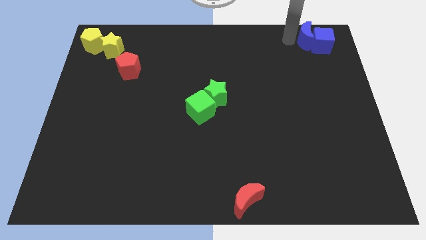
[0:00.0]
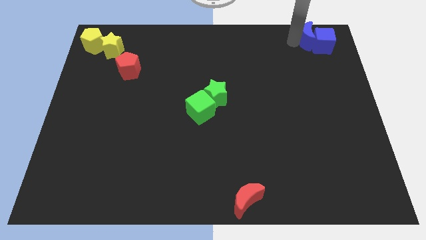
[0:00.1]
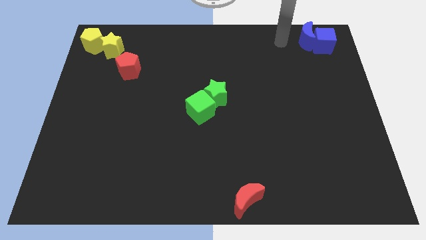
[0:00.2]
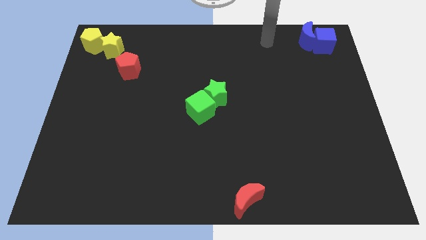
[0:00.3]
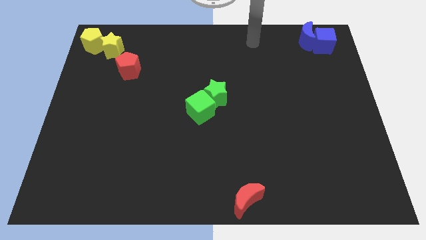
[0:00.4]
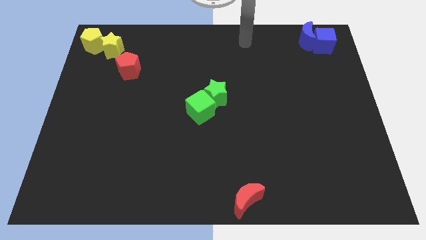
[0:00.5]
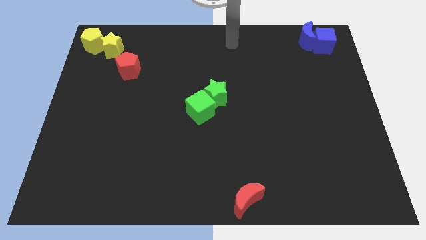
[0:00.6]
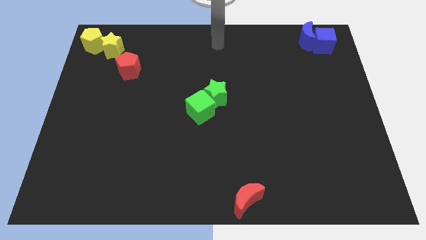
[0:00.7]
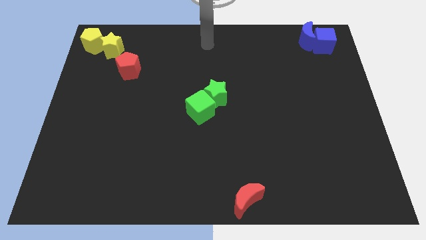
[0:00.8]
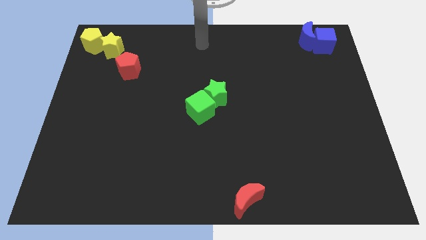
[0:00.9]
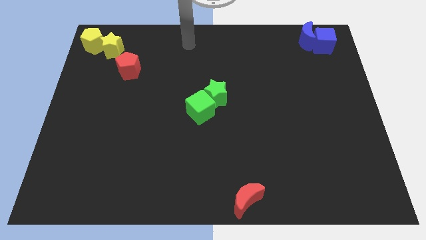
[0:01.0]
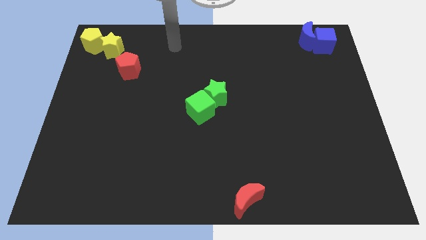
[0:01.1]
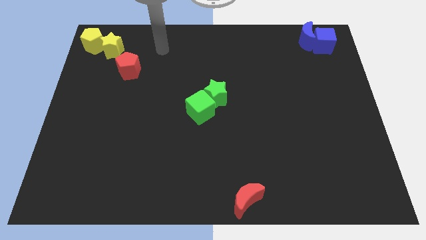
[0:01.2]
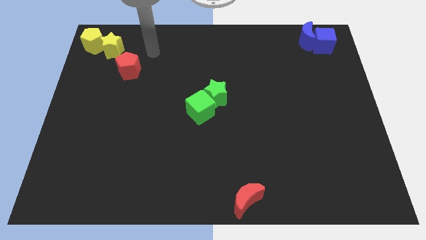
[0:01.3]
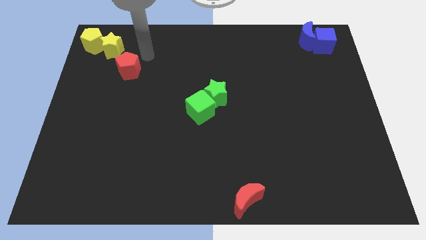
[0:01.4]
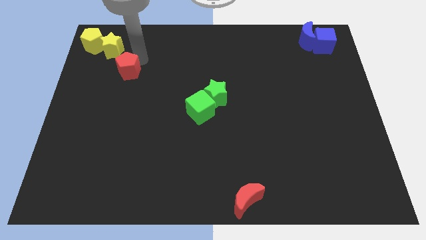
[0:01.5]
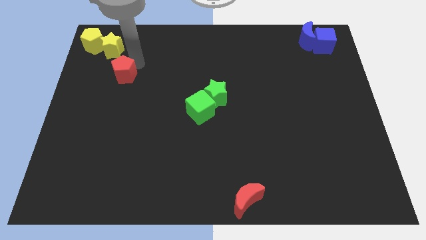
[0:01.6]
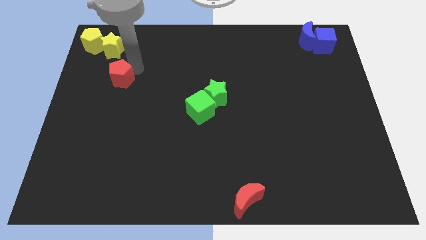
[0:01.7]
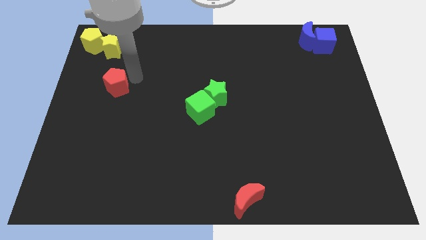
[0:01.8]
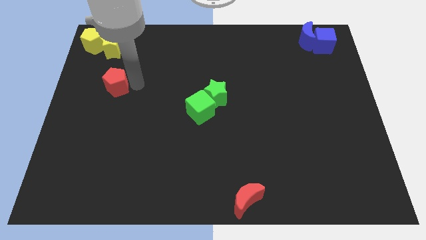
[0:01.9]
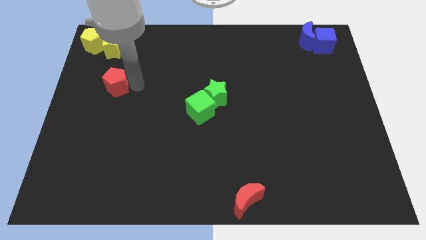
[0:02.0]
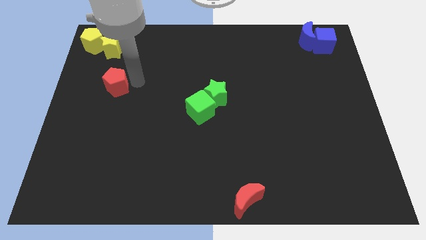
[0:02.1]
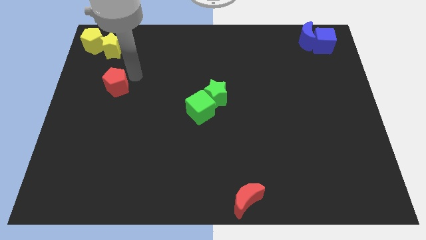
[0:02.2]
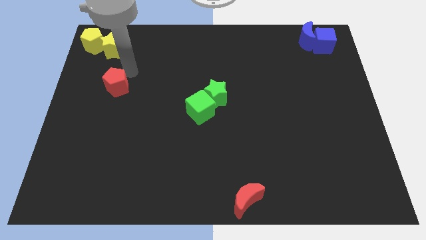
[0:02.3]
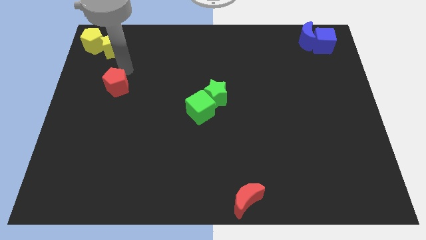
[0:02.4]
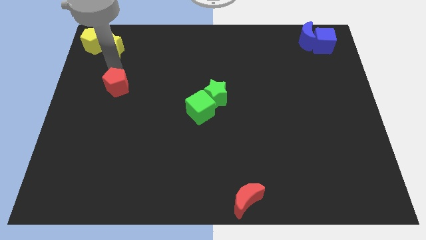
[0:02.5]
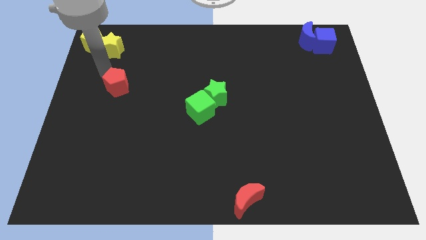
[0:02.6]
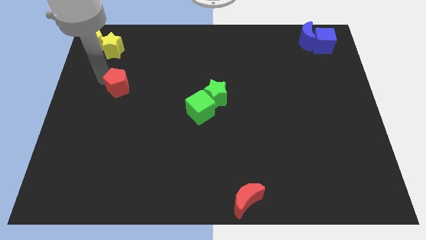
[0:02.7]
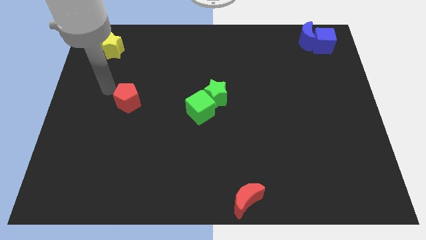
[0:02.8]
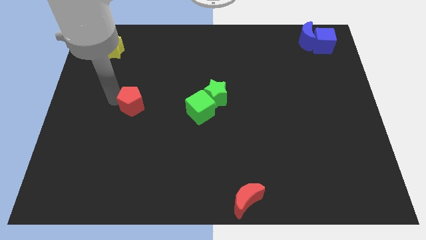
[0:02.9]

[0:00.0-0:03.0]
move red pentagon slightly down

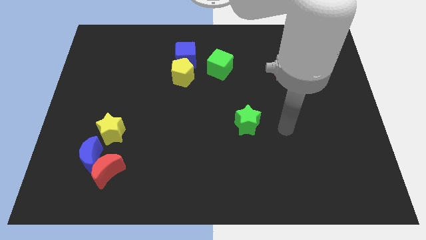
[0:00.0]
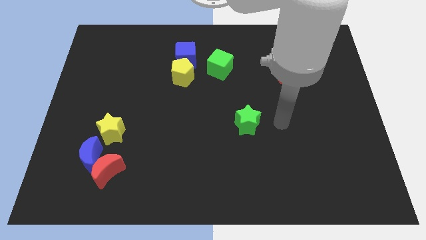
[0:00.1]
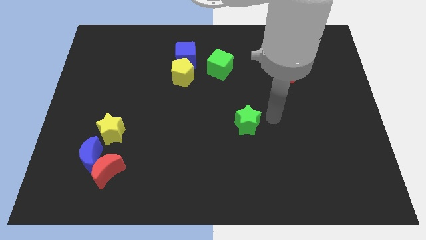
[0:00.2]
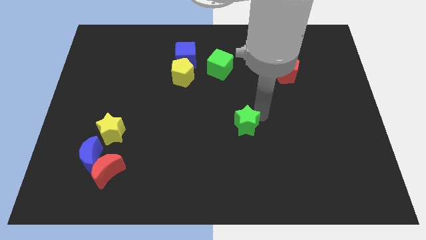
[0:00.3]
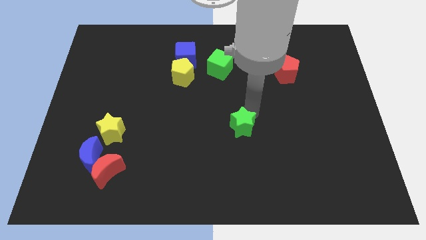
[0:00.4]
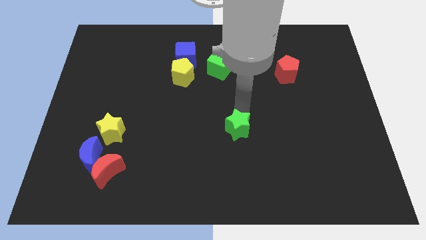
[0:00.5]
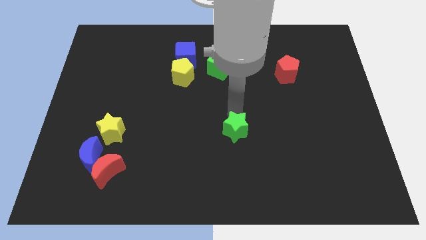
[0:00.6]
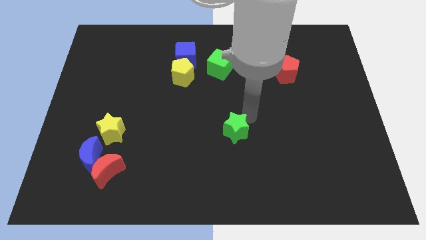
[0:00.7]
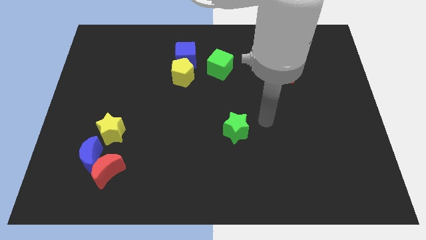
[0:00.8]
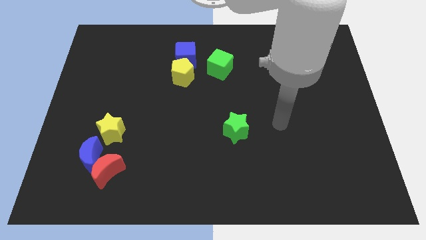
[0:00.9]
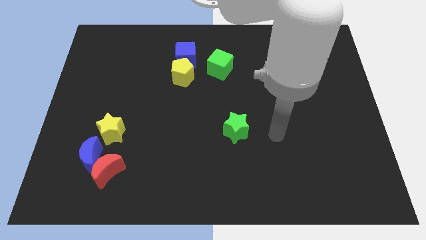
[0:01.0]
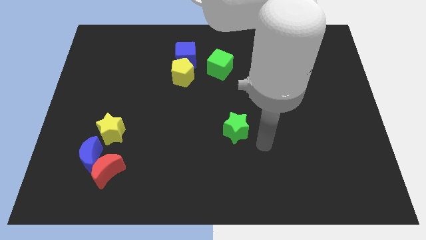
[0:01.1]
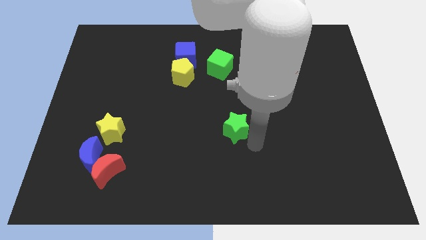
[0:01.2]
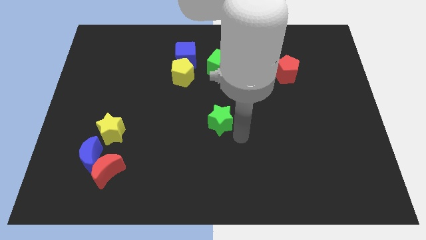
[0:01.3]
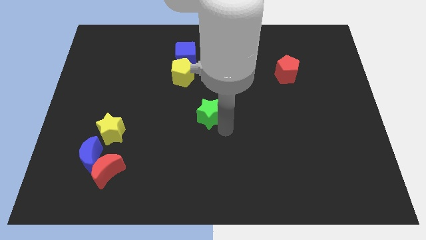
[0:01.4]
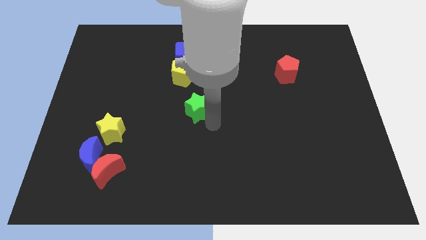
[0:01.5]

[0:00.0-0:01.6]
place the green star at the center of the board

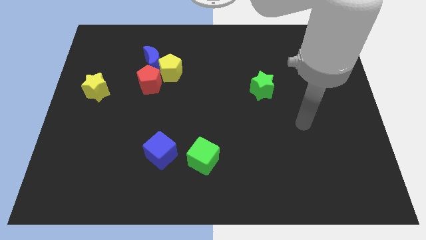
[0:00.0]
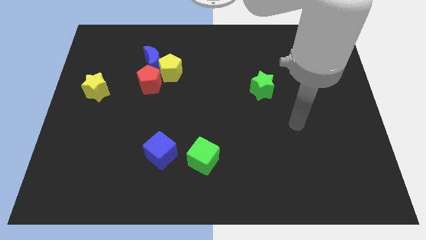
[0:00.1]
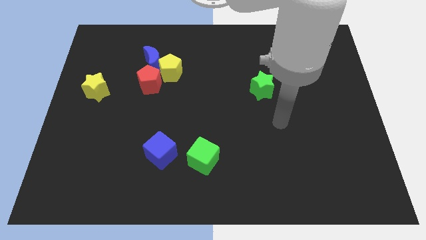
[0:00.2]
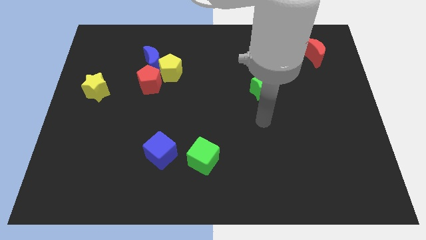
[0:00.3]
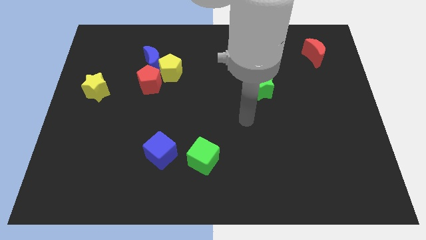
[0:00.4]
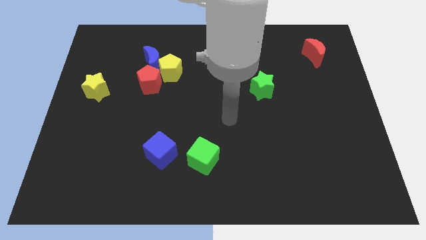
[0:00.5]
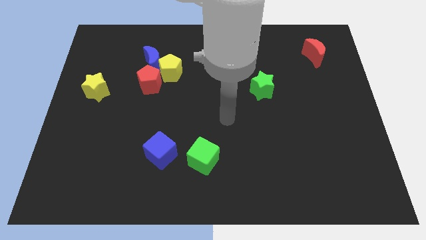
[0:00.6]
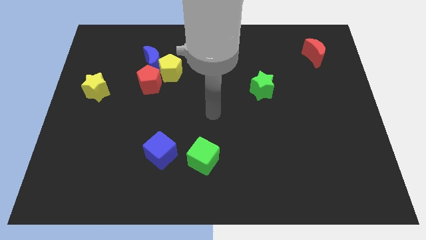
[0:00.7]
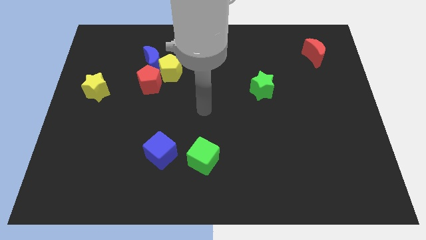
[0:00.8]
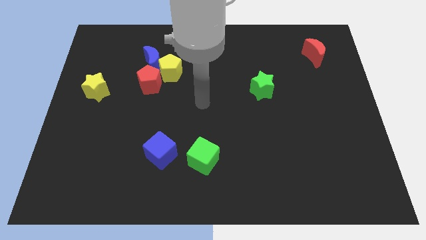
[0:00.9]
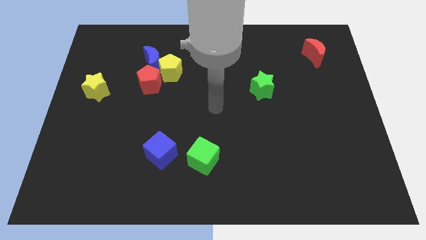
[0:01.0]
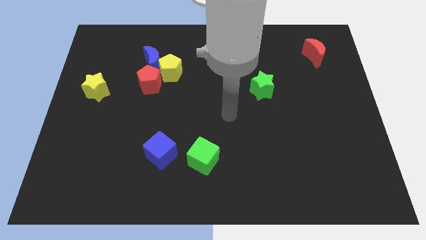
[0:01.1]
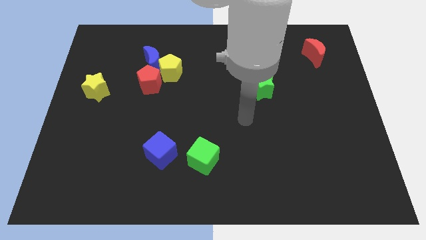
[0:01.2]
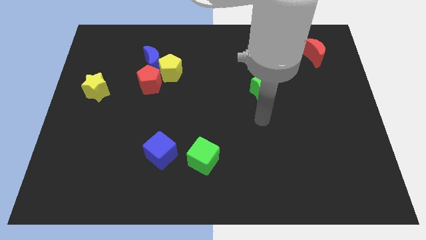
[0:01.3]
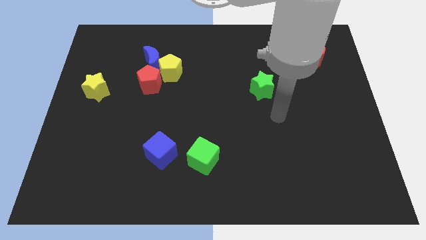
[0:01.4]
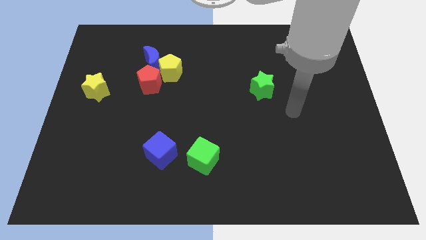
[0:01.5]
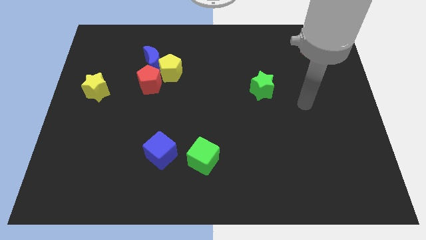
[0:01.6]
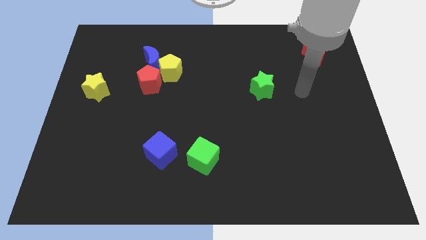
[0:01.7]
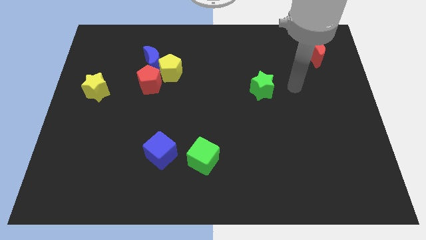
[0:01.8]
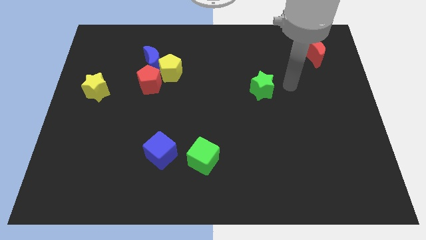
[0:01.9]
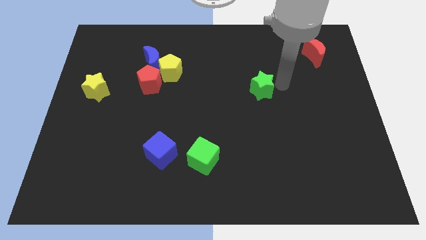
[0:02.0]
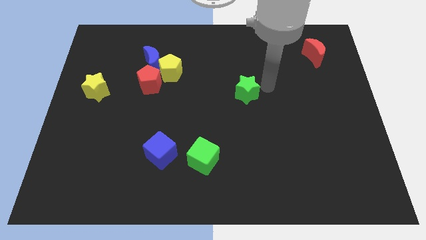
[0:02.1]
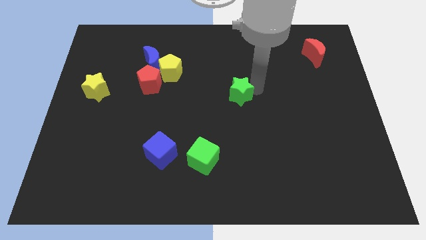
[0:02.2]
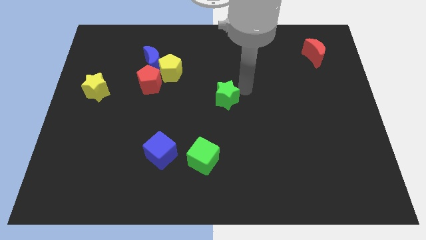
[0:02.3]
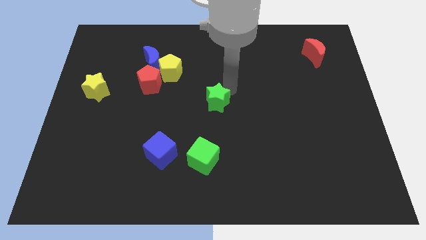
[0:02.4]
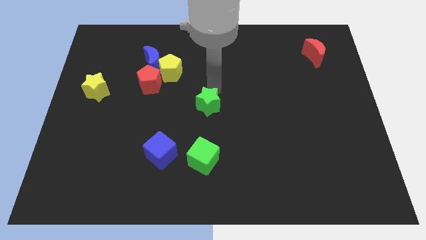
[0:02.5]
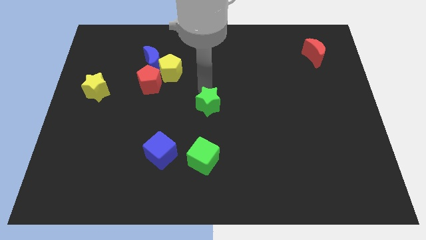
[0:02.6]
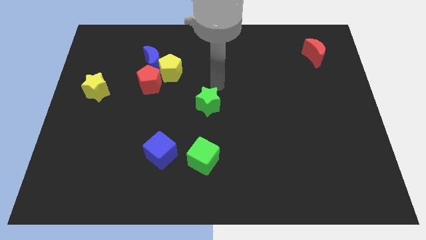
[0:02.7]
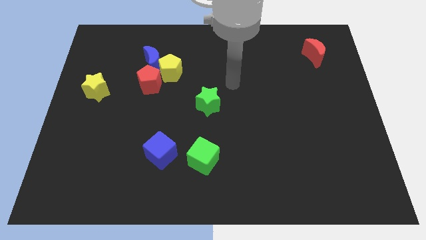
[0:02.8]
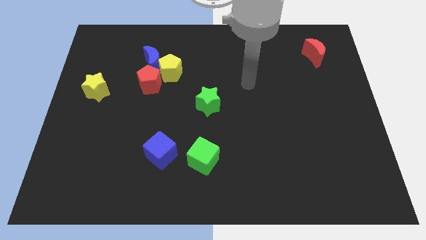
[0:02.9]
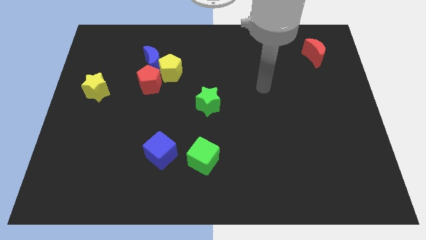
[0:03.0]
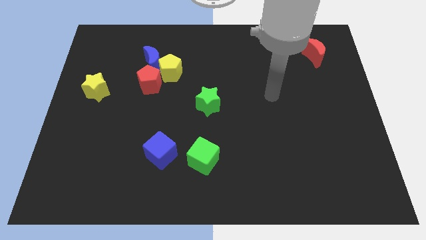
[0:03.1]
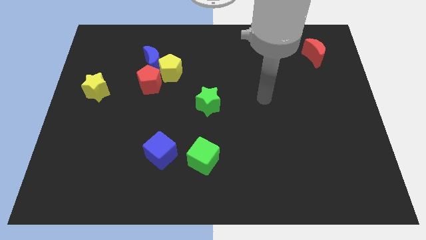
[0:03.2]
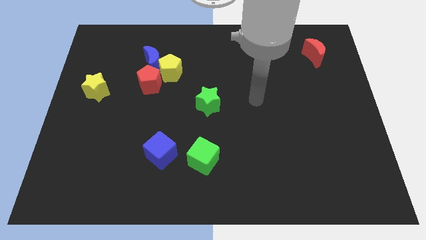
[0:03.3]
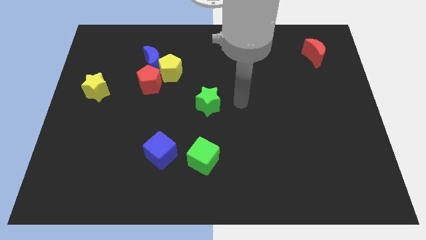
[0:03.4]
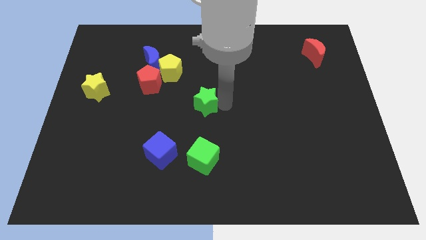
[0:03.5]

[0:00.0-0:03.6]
move the green star vertically above the top side of the green cube

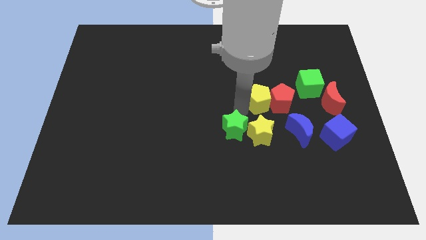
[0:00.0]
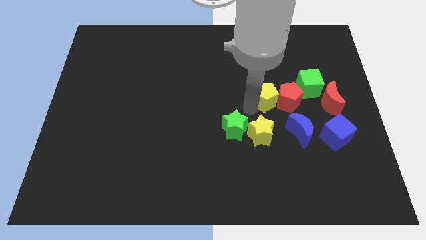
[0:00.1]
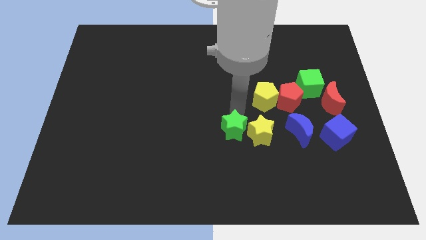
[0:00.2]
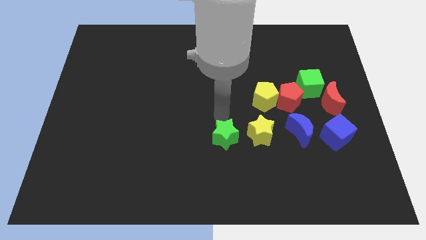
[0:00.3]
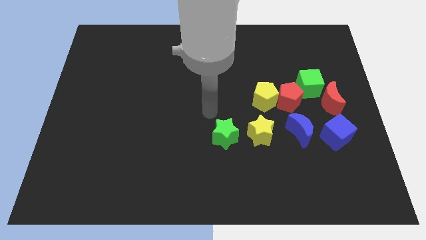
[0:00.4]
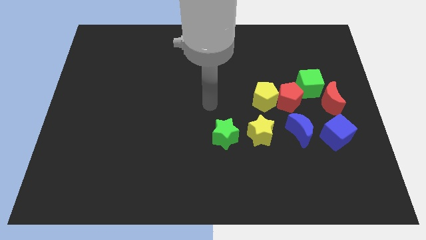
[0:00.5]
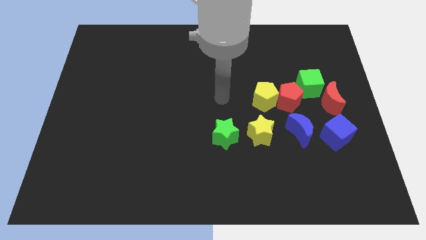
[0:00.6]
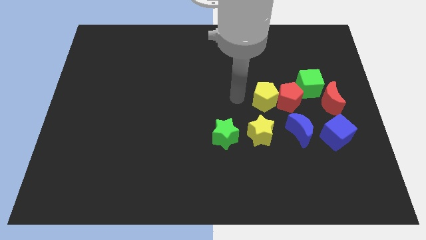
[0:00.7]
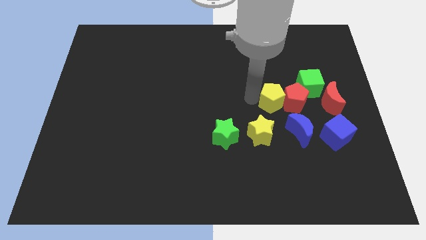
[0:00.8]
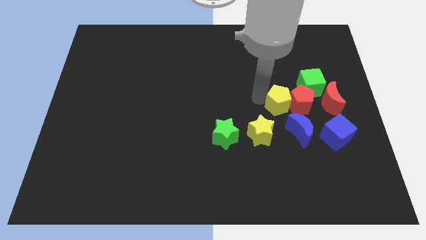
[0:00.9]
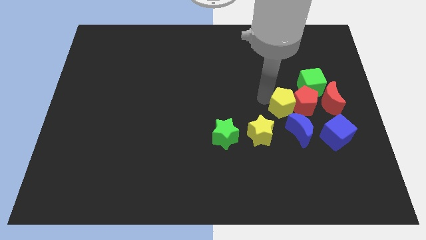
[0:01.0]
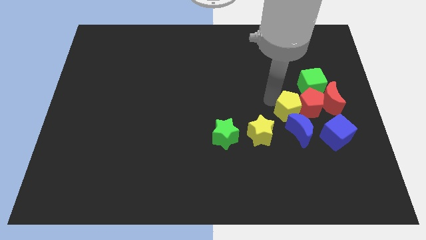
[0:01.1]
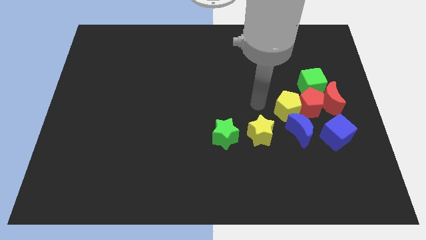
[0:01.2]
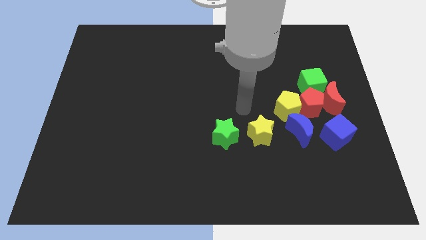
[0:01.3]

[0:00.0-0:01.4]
move the green star horizontal parallel to the yellow star
